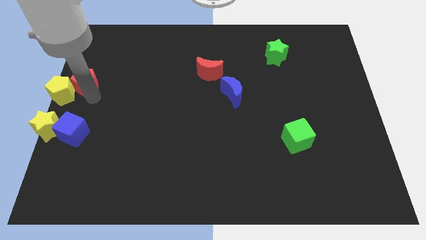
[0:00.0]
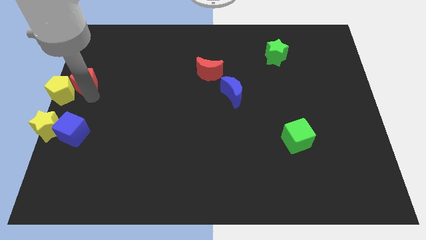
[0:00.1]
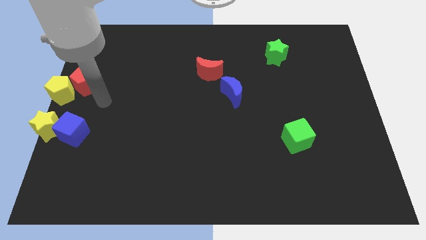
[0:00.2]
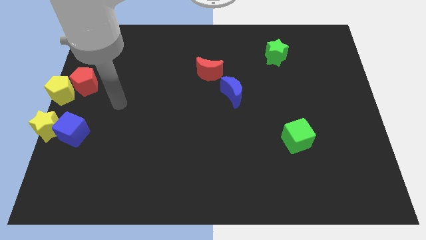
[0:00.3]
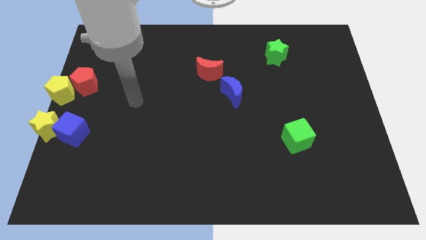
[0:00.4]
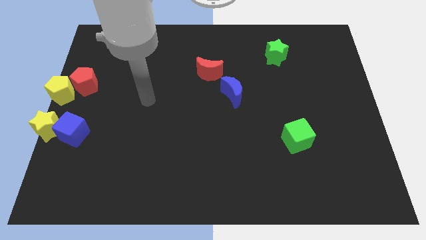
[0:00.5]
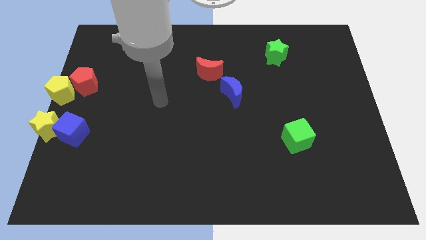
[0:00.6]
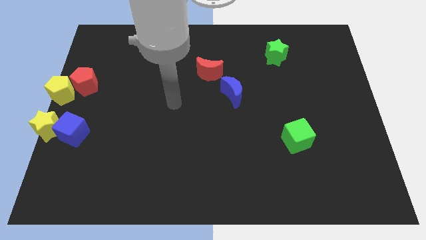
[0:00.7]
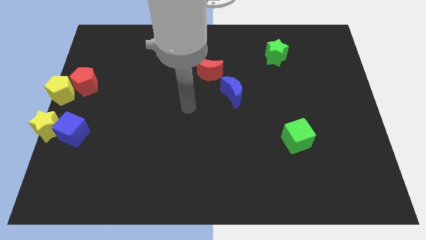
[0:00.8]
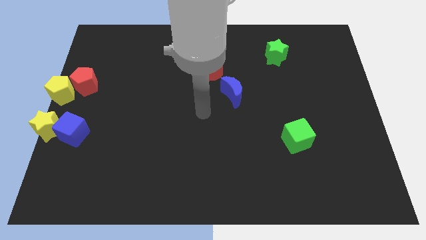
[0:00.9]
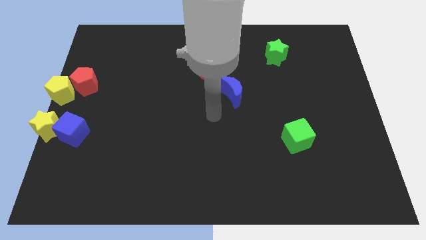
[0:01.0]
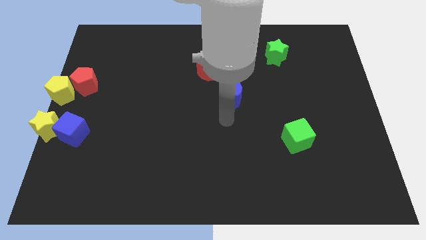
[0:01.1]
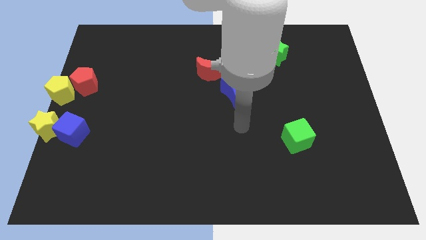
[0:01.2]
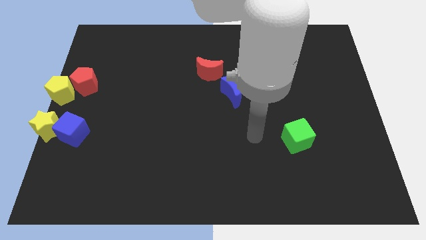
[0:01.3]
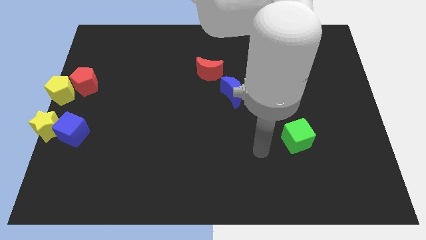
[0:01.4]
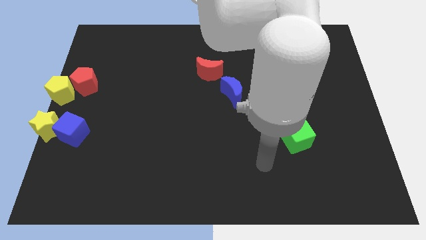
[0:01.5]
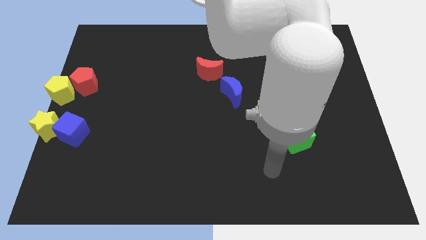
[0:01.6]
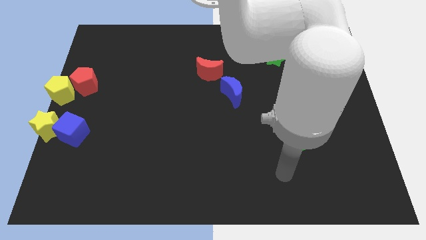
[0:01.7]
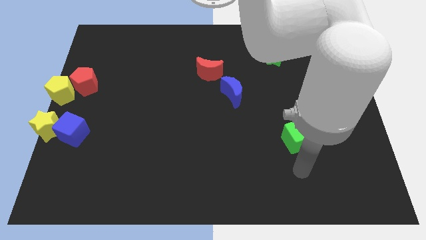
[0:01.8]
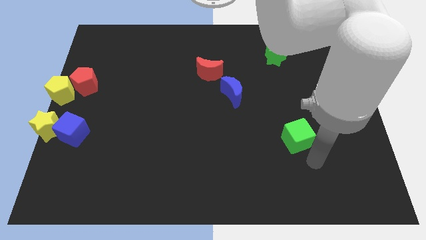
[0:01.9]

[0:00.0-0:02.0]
move your arm away from the red pentagon

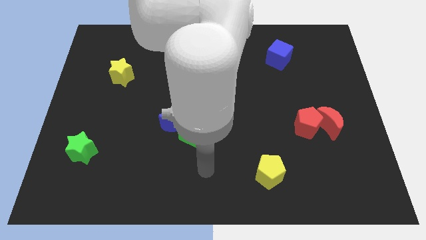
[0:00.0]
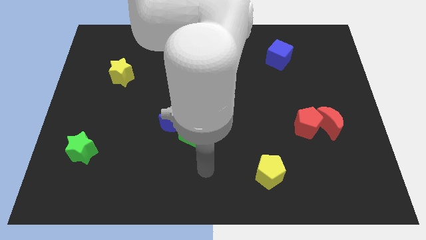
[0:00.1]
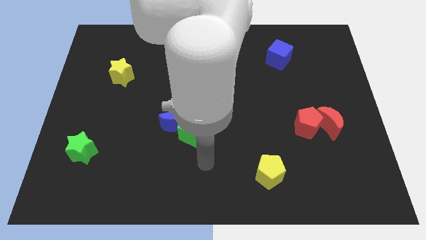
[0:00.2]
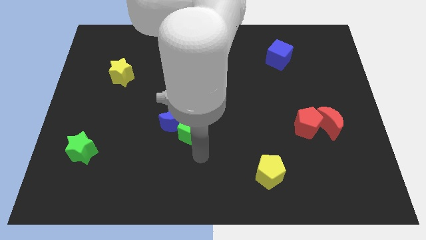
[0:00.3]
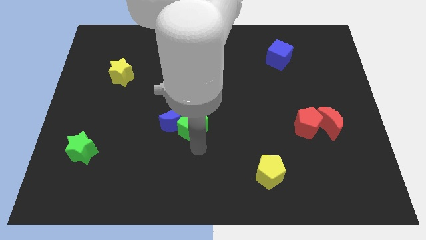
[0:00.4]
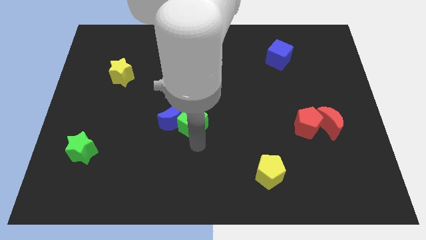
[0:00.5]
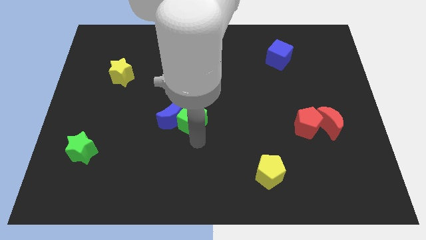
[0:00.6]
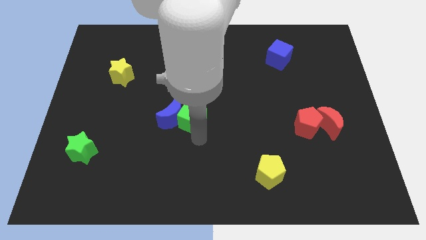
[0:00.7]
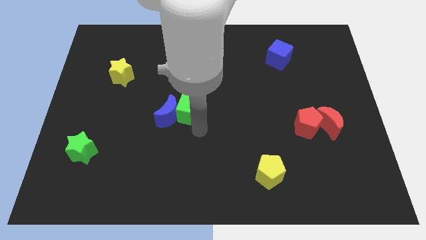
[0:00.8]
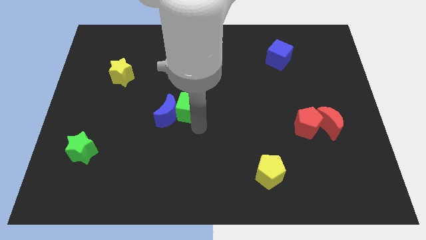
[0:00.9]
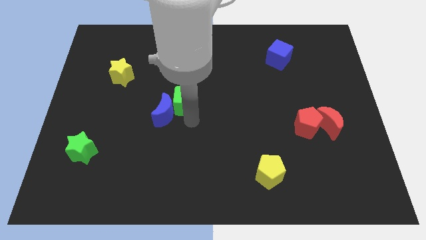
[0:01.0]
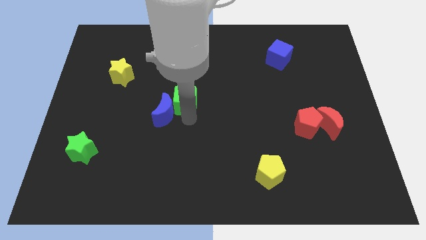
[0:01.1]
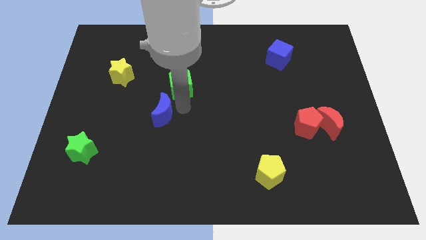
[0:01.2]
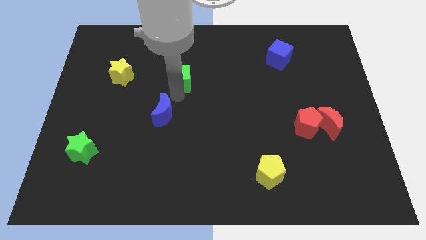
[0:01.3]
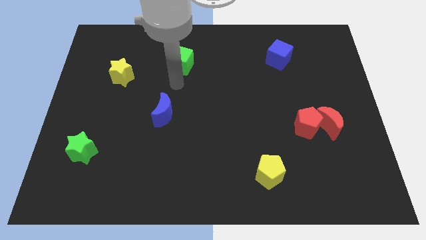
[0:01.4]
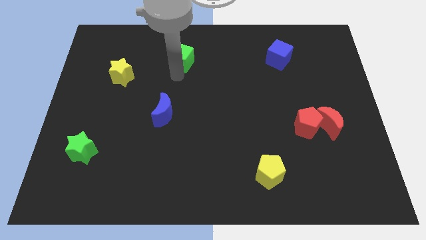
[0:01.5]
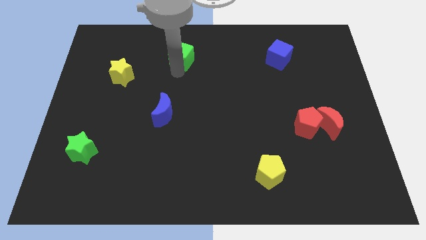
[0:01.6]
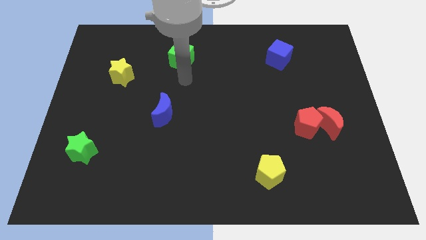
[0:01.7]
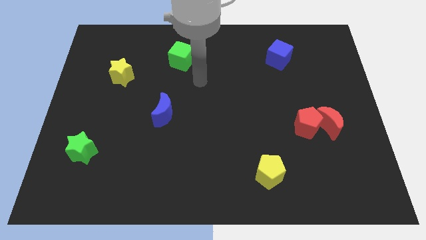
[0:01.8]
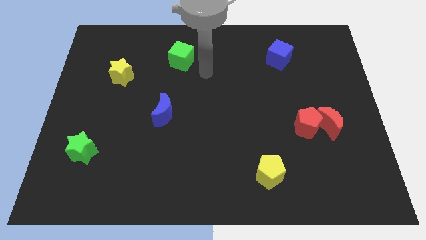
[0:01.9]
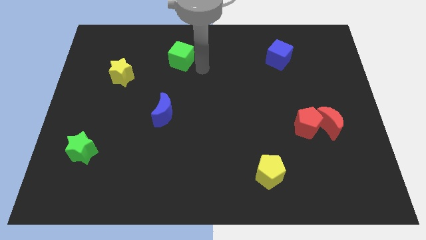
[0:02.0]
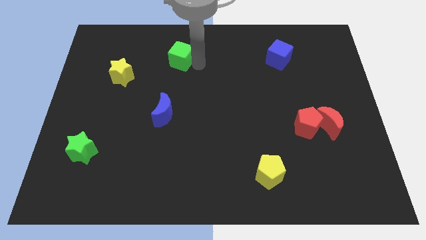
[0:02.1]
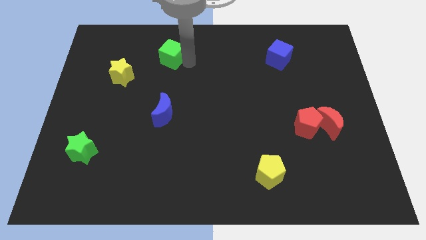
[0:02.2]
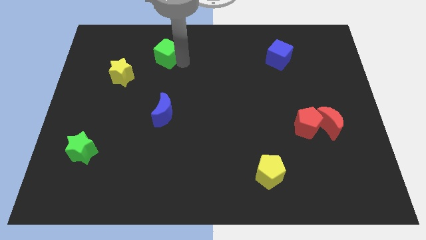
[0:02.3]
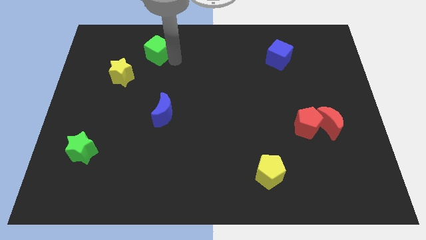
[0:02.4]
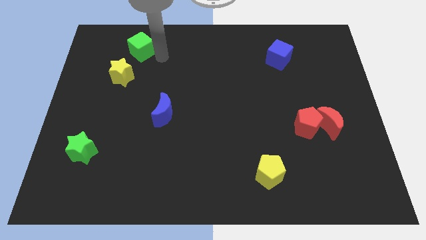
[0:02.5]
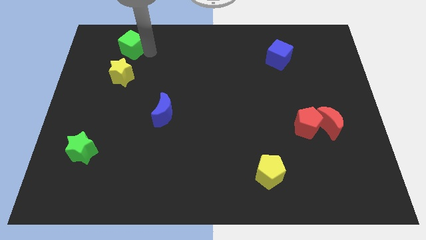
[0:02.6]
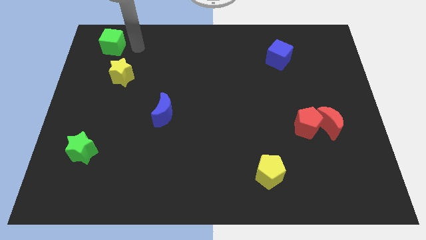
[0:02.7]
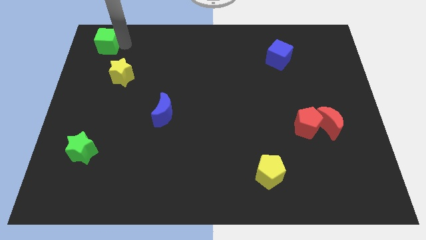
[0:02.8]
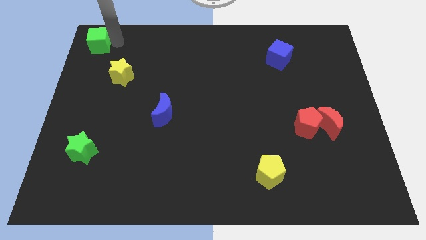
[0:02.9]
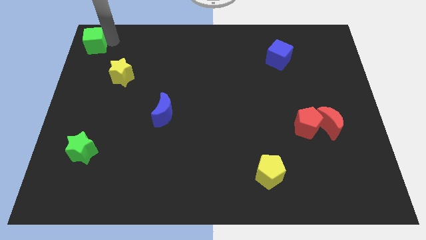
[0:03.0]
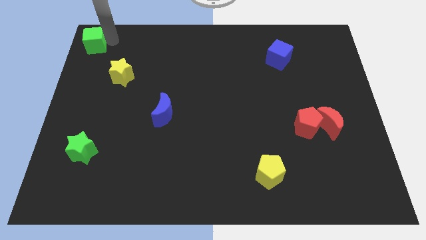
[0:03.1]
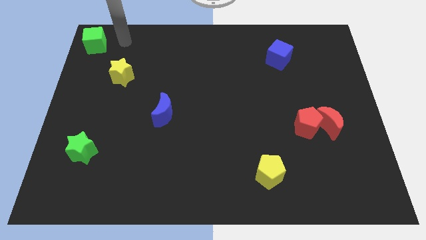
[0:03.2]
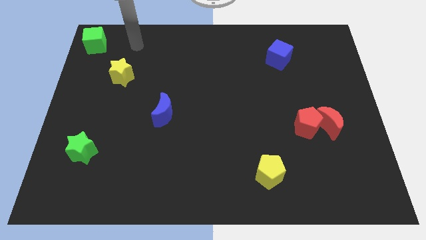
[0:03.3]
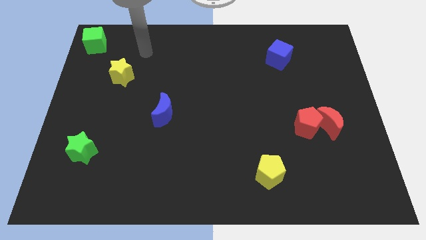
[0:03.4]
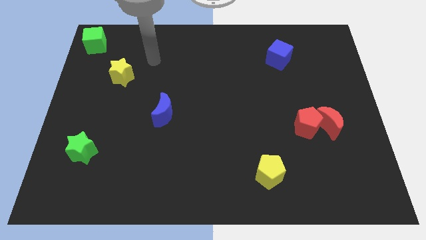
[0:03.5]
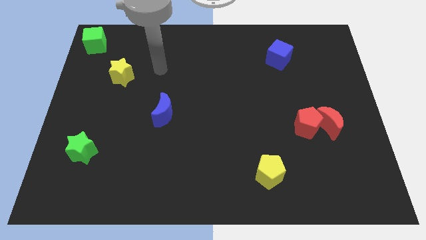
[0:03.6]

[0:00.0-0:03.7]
move the green cube to the top left side of the board

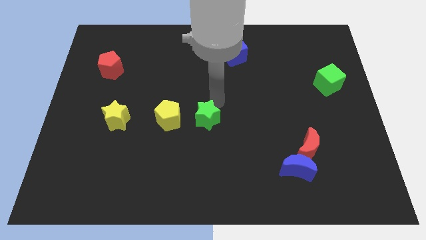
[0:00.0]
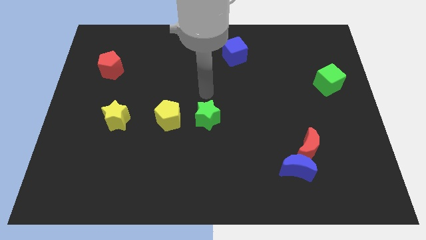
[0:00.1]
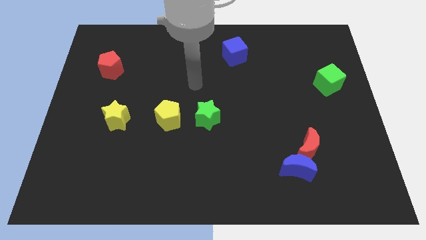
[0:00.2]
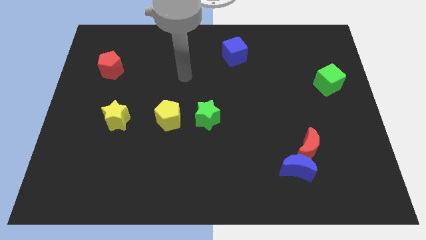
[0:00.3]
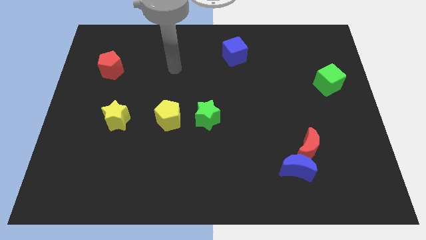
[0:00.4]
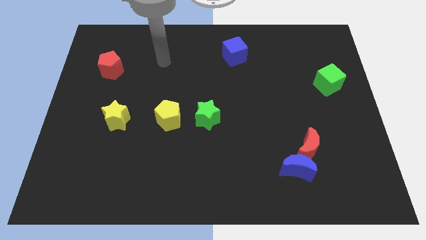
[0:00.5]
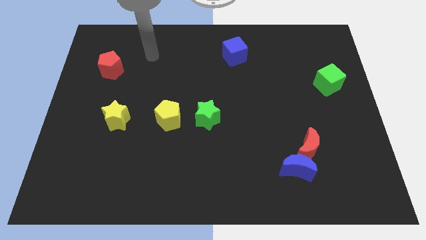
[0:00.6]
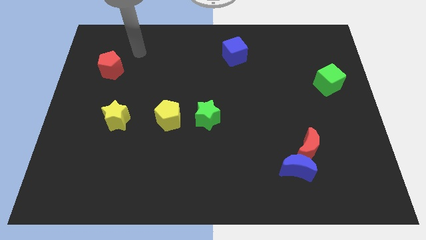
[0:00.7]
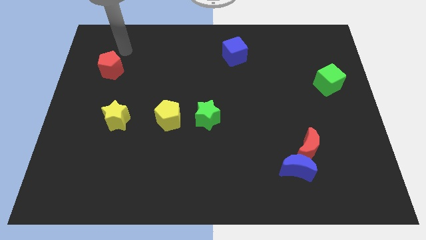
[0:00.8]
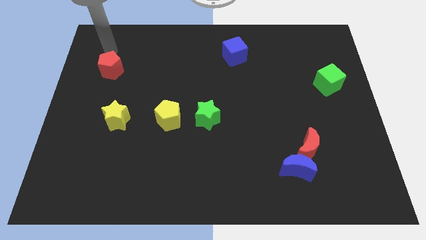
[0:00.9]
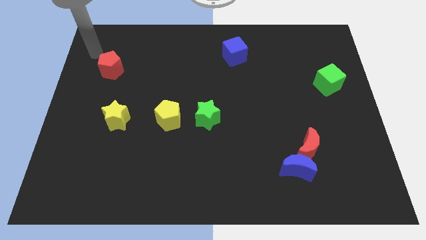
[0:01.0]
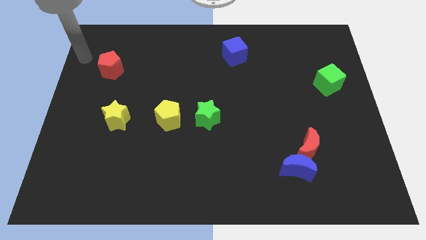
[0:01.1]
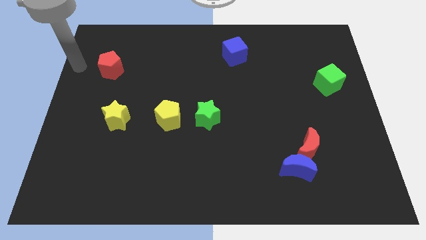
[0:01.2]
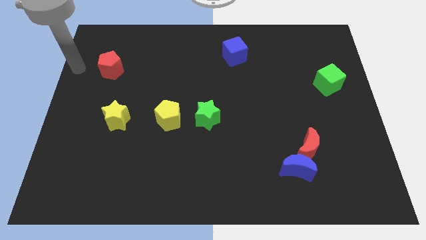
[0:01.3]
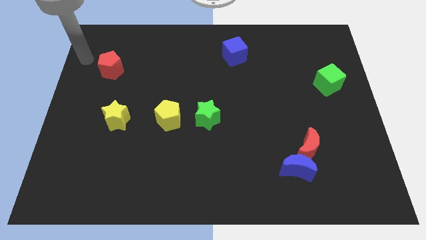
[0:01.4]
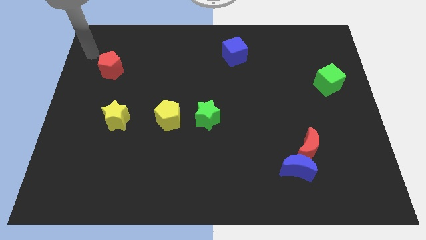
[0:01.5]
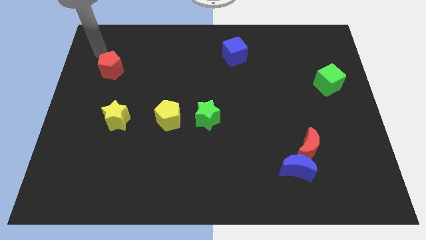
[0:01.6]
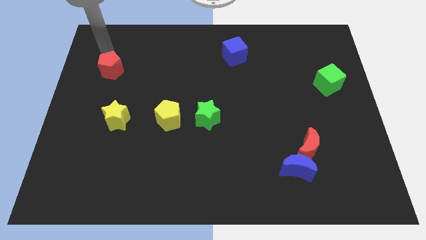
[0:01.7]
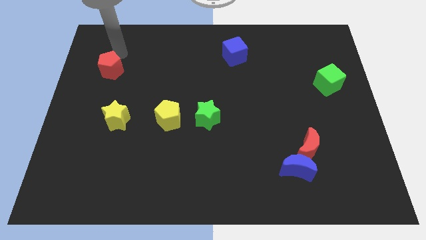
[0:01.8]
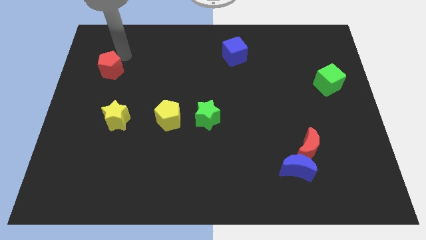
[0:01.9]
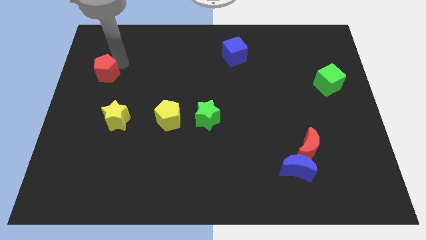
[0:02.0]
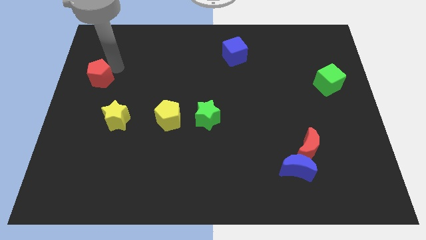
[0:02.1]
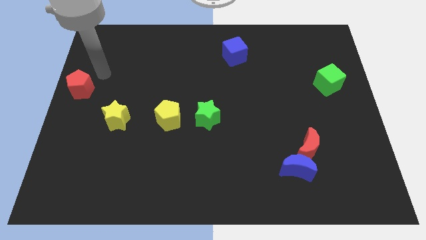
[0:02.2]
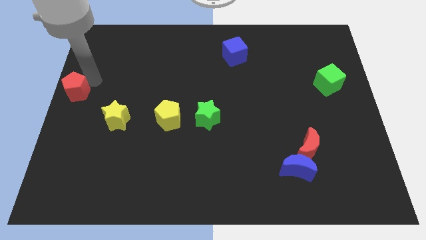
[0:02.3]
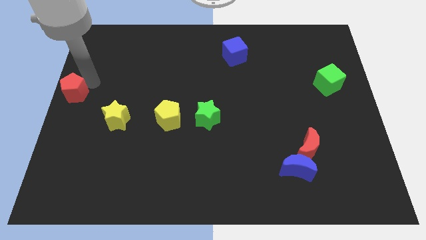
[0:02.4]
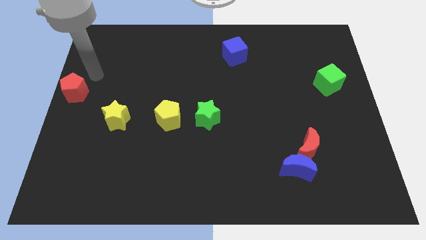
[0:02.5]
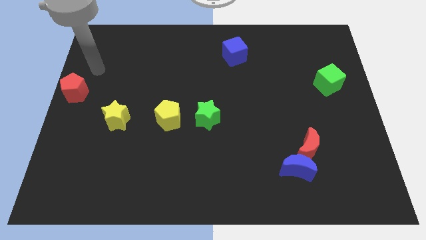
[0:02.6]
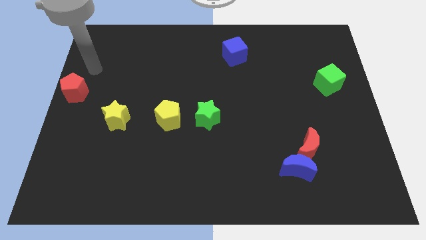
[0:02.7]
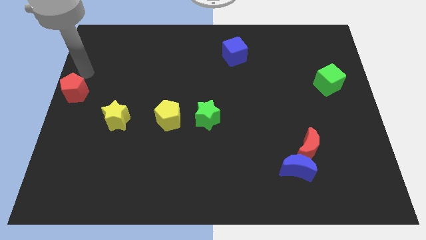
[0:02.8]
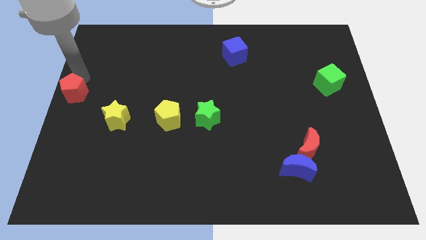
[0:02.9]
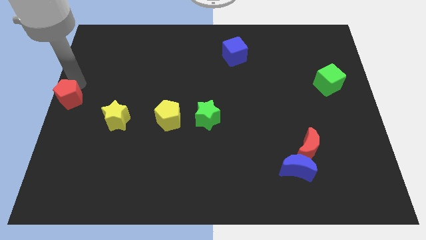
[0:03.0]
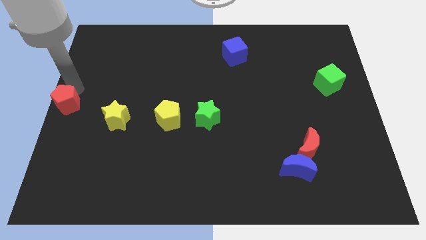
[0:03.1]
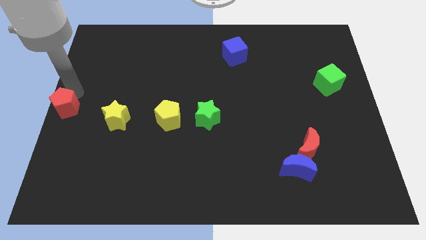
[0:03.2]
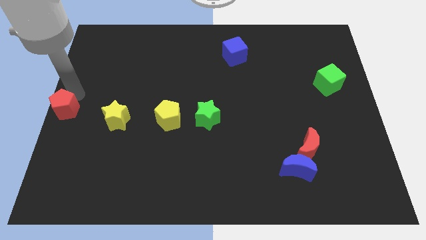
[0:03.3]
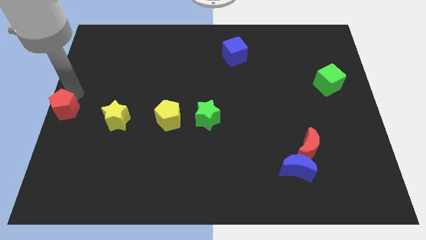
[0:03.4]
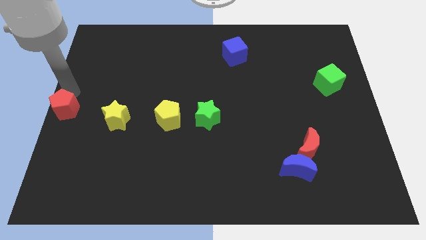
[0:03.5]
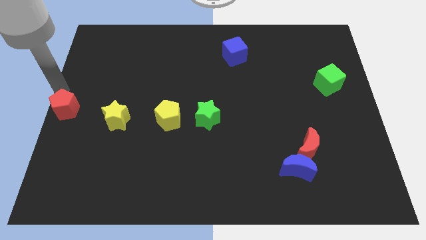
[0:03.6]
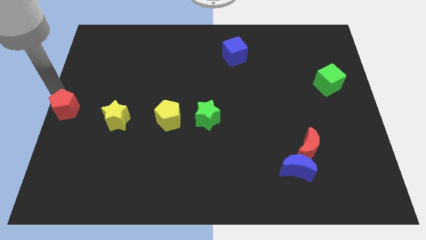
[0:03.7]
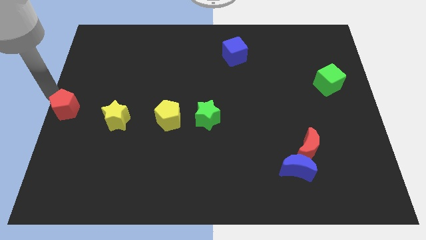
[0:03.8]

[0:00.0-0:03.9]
slide red pentagon to the center left
